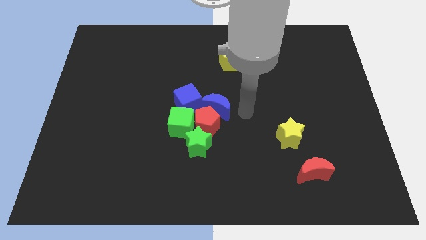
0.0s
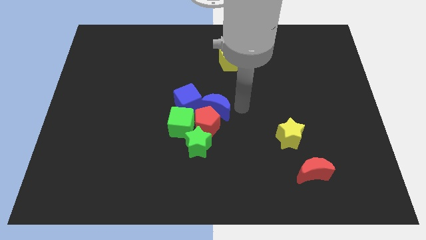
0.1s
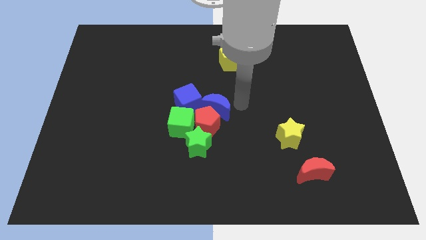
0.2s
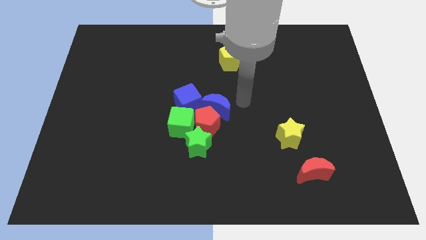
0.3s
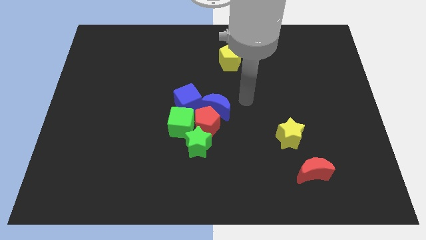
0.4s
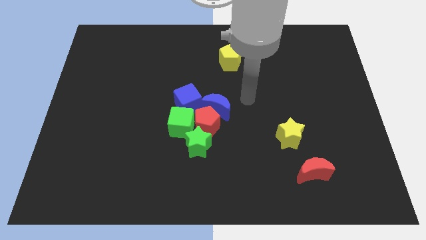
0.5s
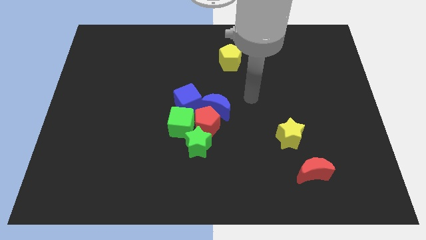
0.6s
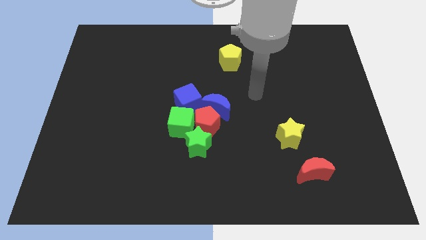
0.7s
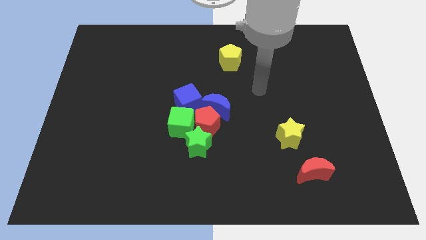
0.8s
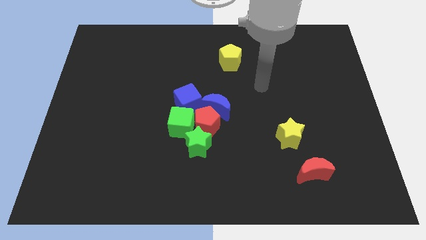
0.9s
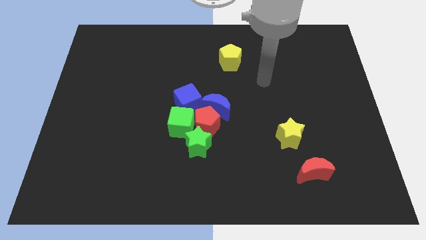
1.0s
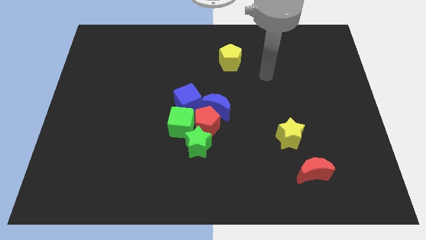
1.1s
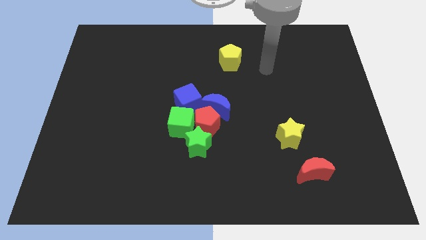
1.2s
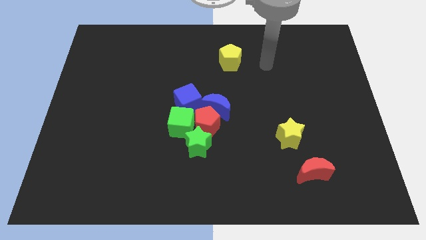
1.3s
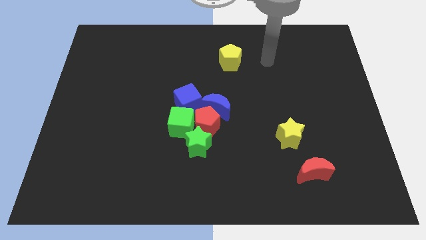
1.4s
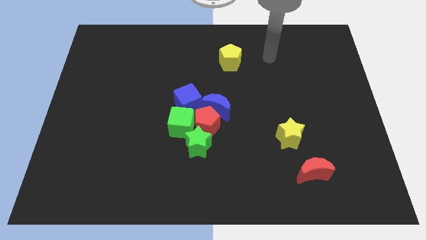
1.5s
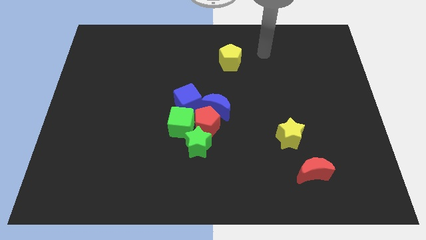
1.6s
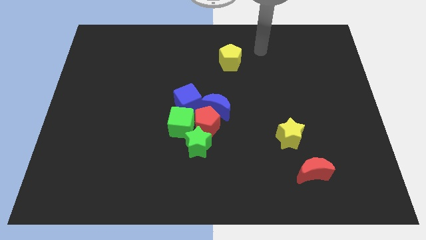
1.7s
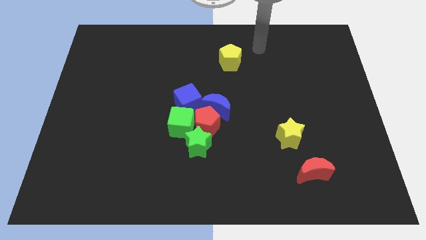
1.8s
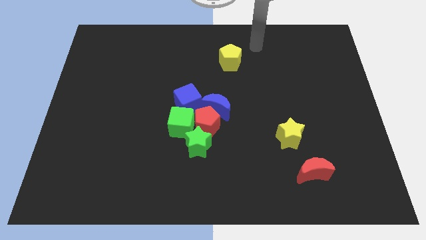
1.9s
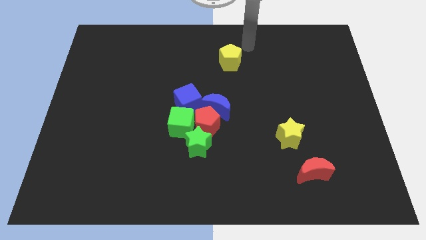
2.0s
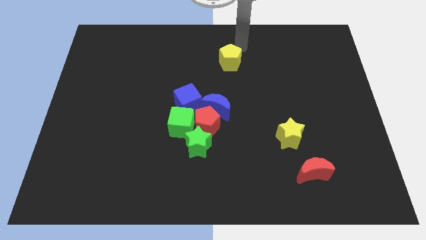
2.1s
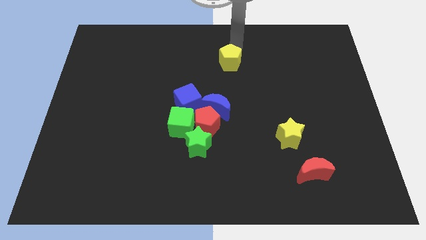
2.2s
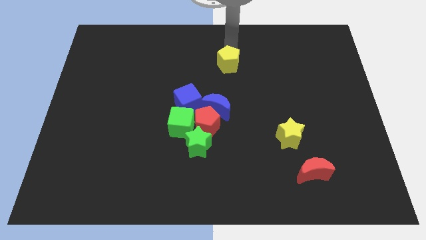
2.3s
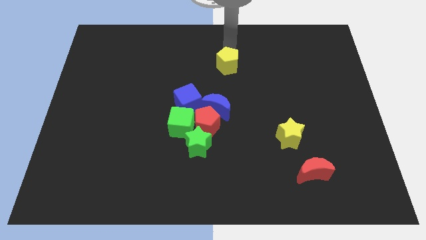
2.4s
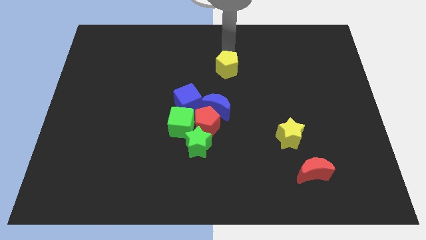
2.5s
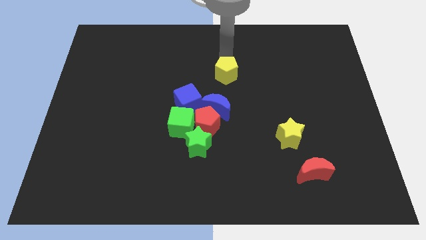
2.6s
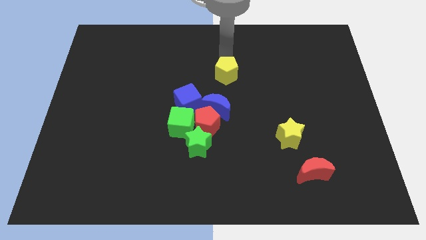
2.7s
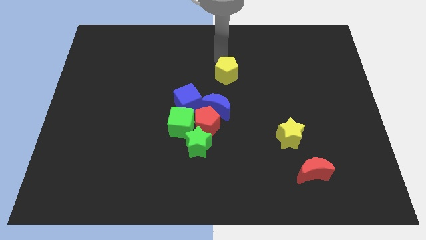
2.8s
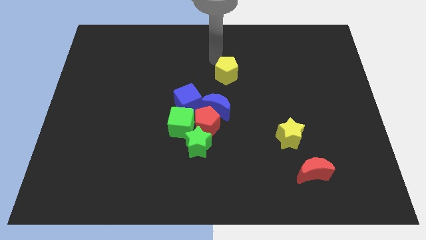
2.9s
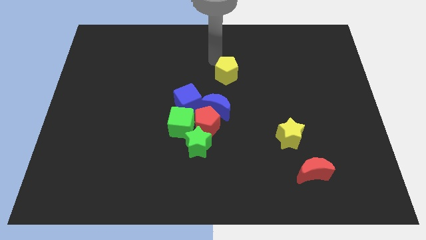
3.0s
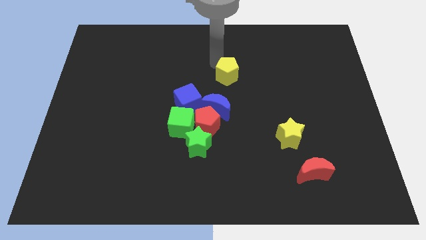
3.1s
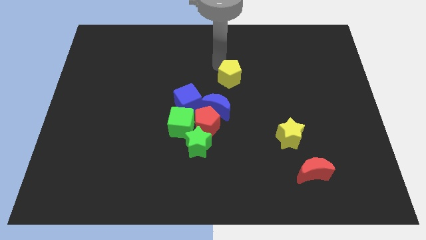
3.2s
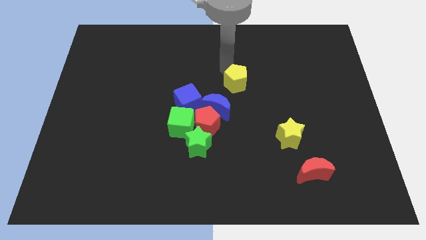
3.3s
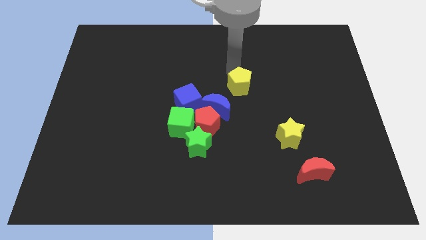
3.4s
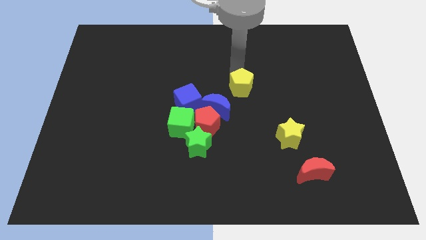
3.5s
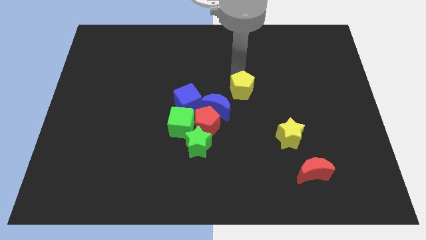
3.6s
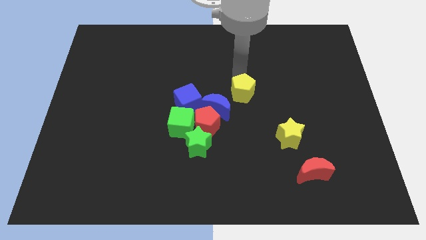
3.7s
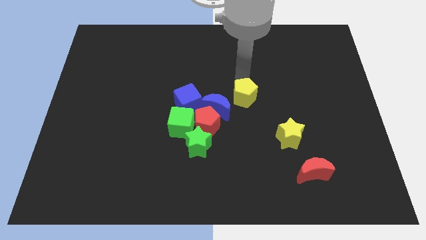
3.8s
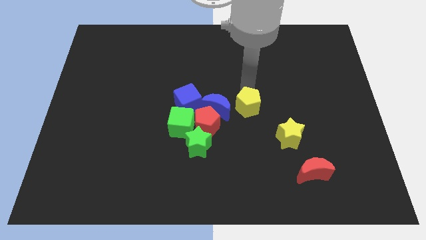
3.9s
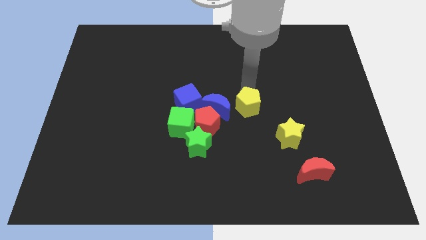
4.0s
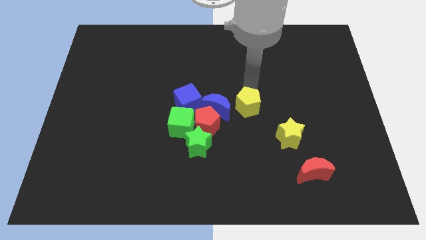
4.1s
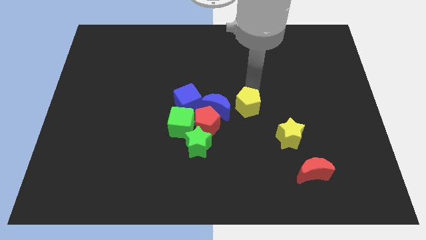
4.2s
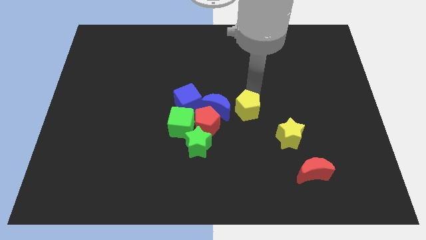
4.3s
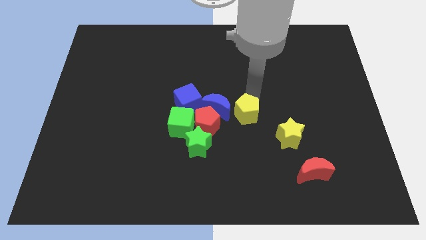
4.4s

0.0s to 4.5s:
move the yellow pentagon diagonal to the right side of the blue crescent

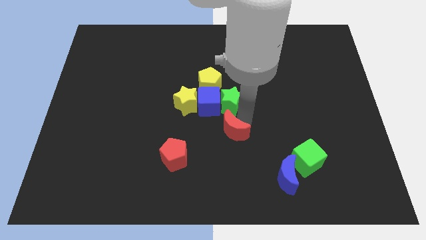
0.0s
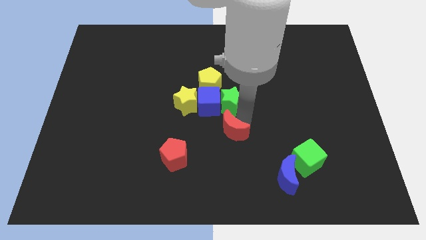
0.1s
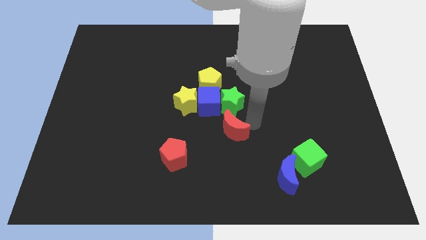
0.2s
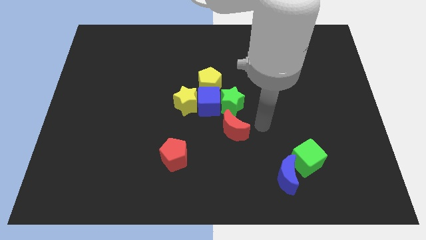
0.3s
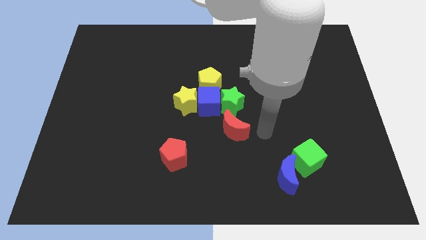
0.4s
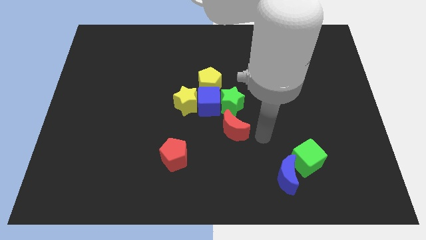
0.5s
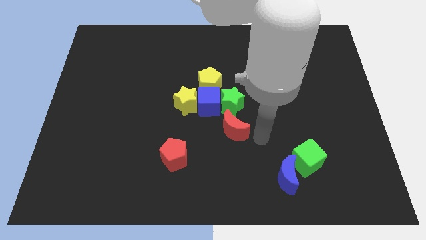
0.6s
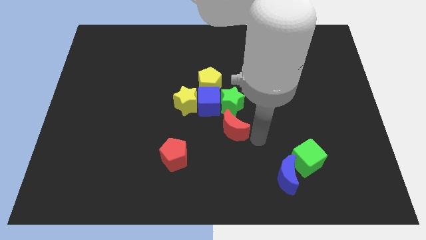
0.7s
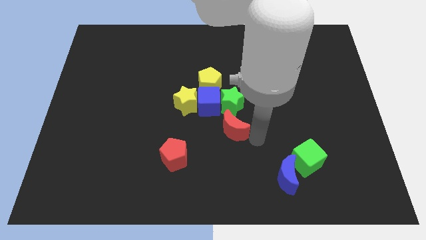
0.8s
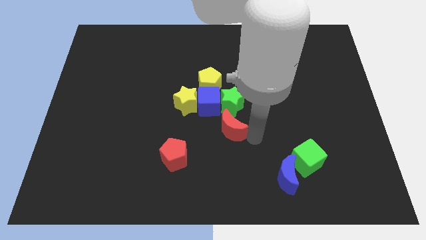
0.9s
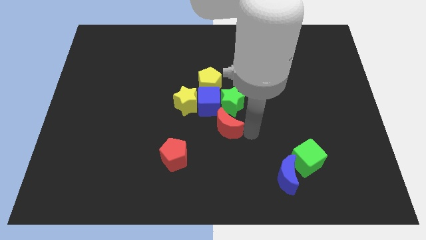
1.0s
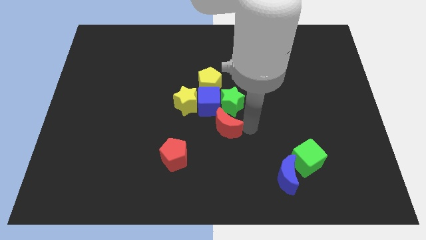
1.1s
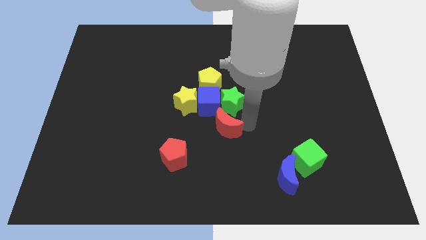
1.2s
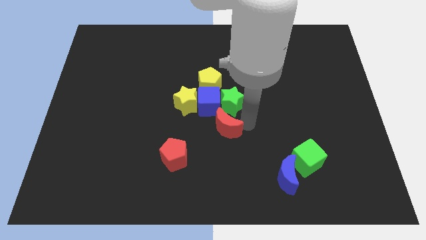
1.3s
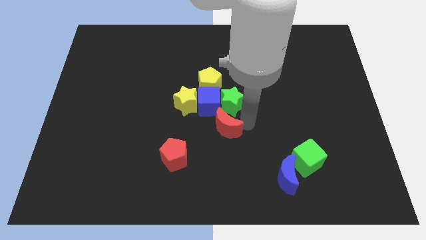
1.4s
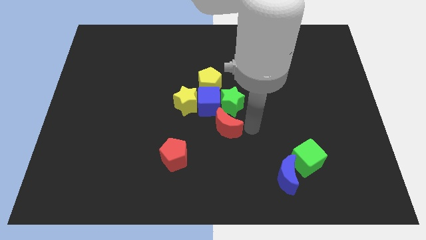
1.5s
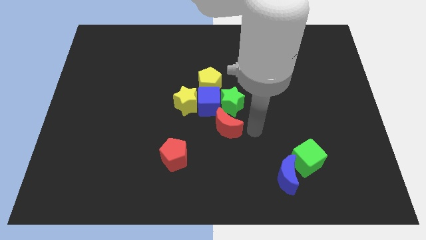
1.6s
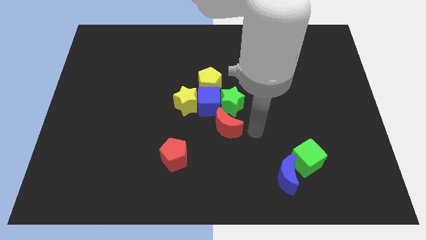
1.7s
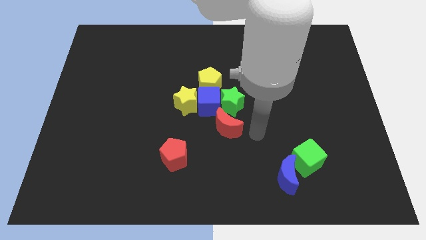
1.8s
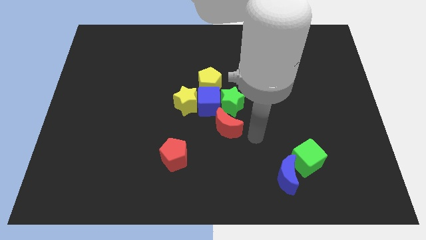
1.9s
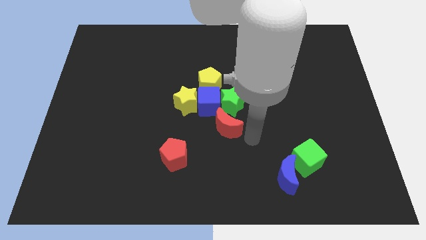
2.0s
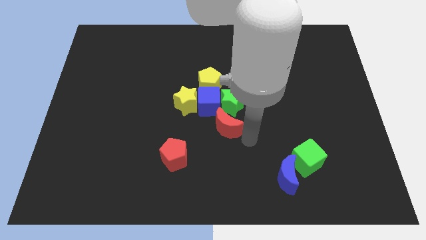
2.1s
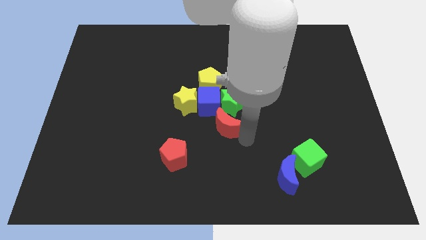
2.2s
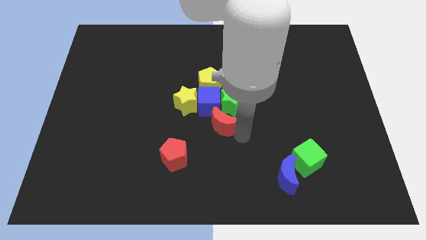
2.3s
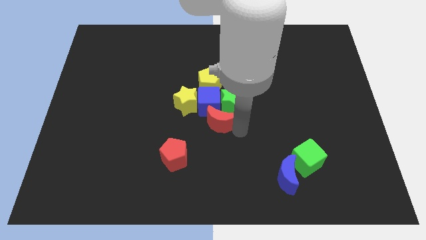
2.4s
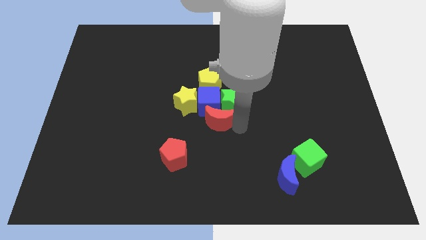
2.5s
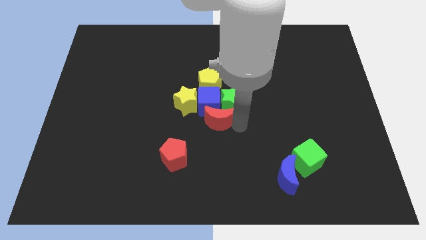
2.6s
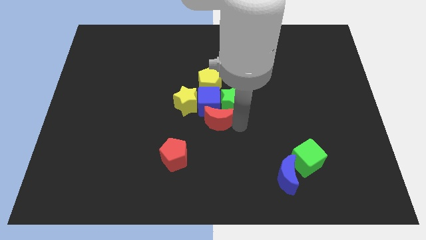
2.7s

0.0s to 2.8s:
place the red crescent towards the blue cube

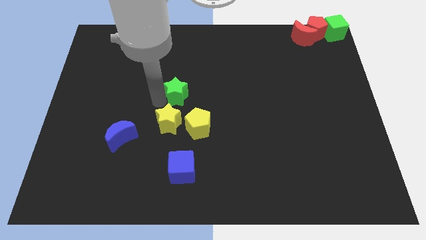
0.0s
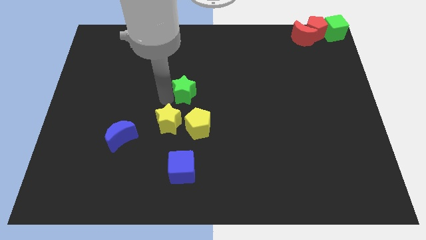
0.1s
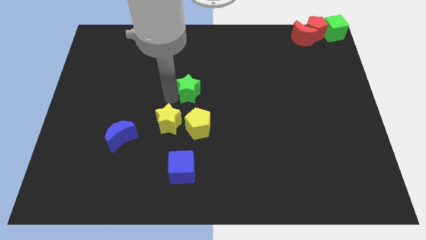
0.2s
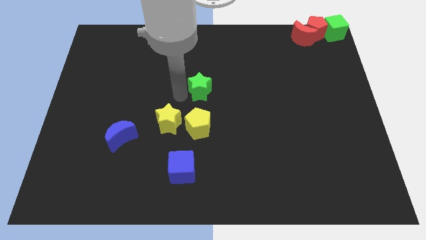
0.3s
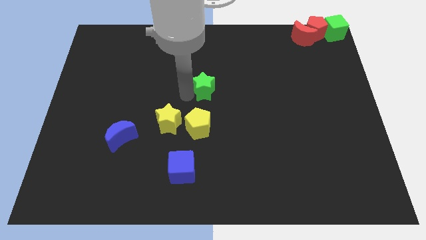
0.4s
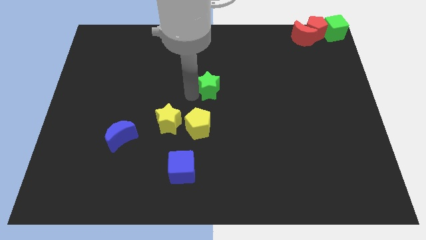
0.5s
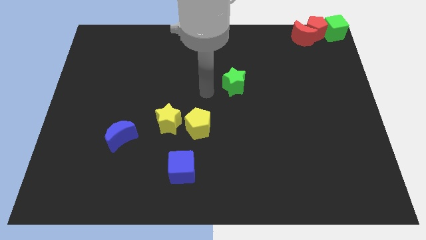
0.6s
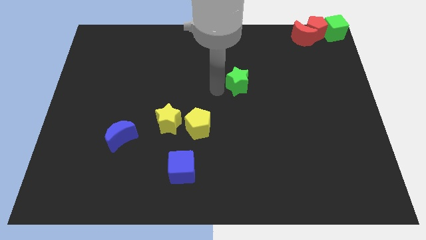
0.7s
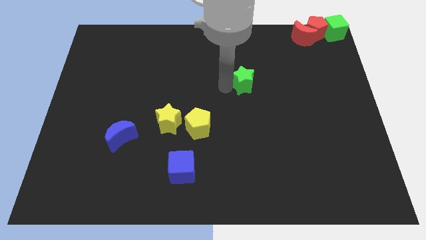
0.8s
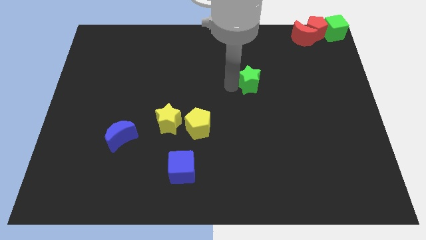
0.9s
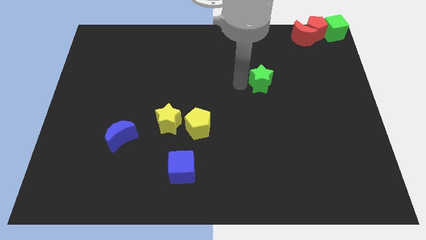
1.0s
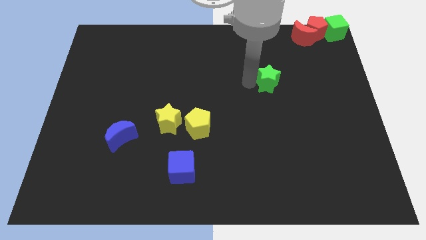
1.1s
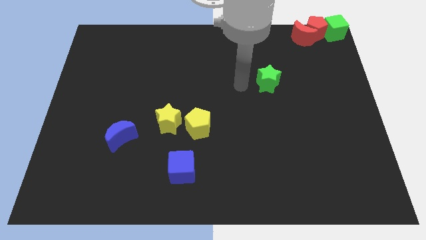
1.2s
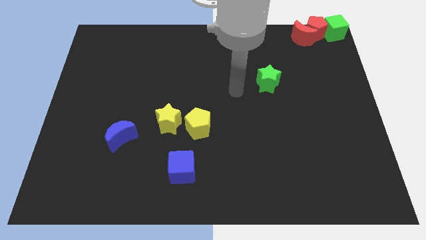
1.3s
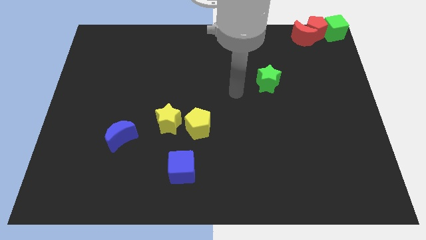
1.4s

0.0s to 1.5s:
place the green star diagonally to the red moon

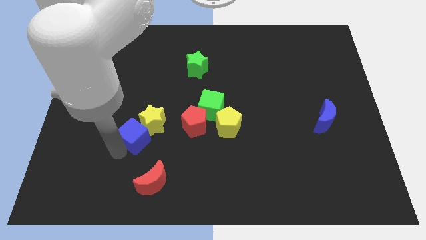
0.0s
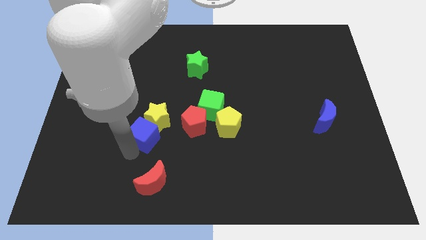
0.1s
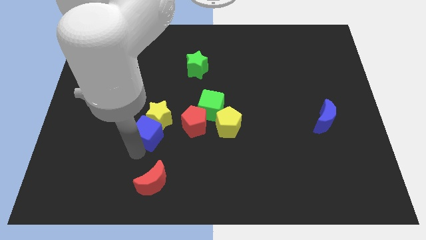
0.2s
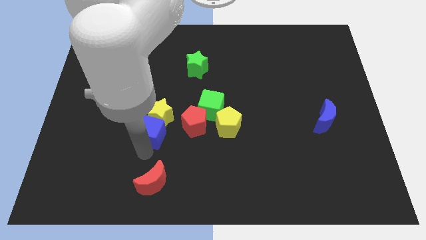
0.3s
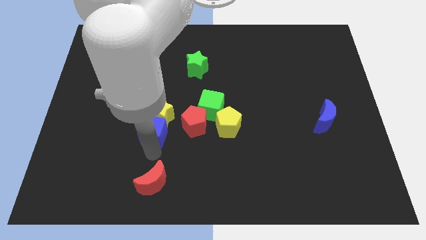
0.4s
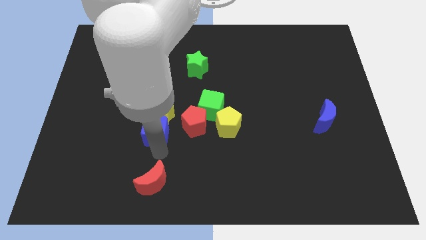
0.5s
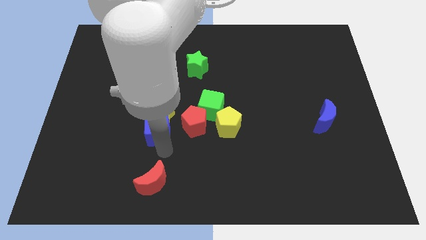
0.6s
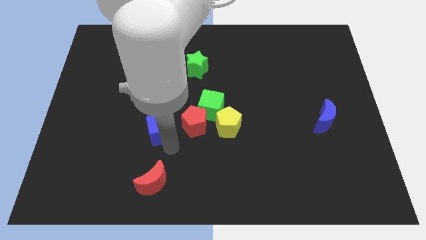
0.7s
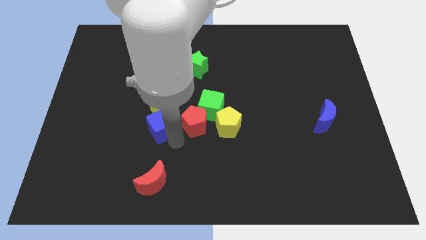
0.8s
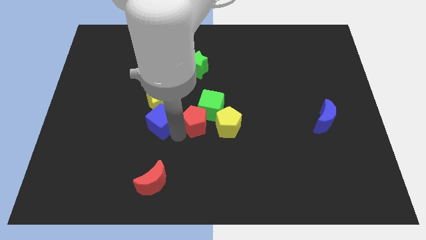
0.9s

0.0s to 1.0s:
push blue moon along with yellow star upwards
